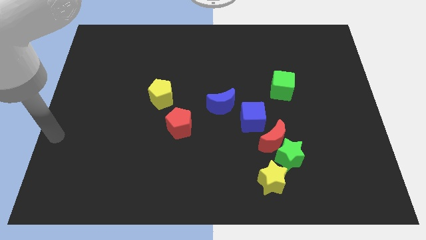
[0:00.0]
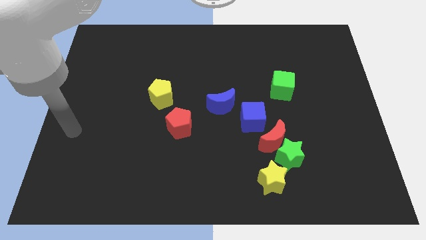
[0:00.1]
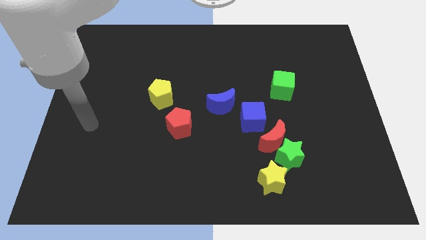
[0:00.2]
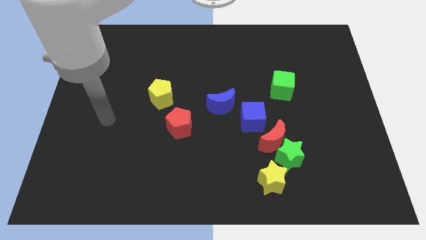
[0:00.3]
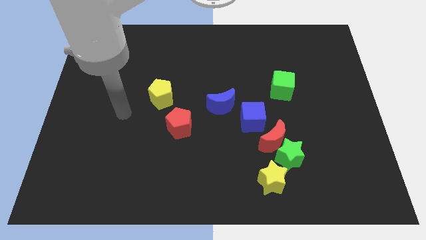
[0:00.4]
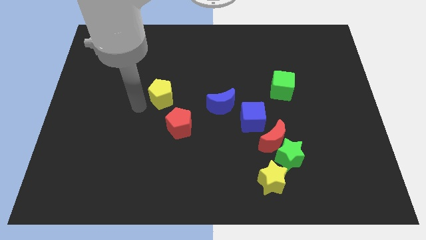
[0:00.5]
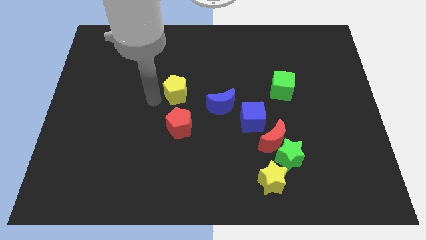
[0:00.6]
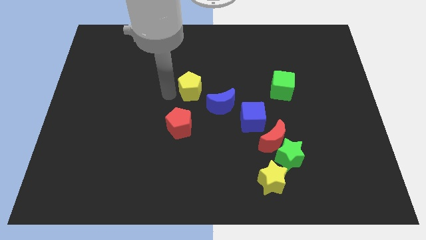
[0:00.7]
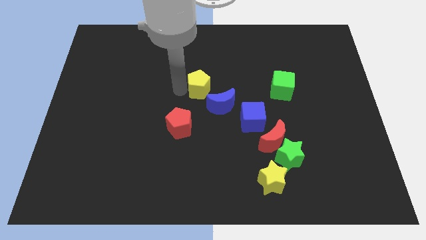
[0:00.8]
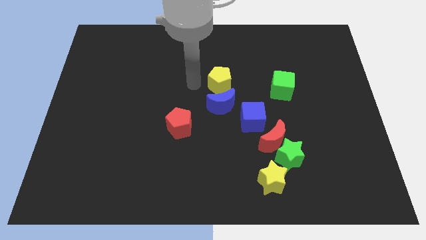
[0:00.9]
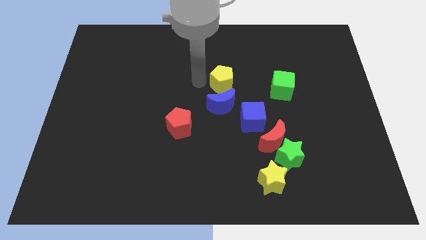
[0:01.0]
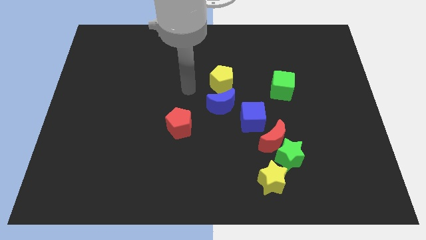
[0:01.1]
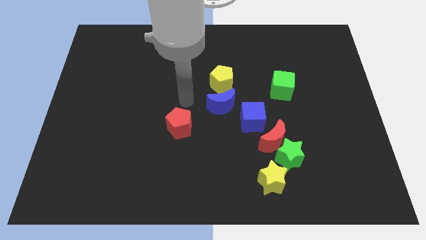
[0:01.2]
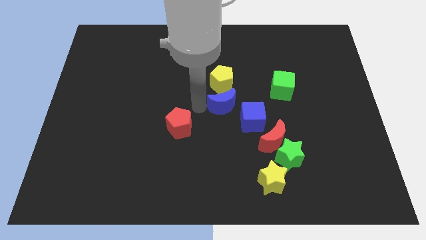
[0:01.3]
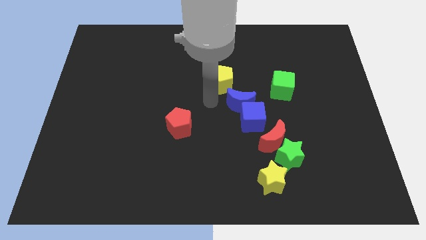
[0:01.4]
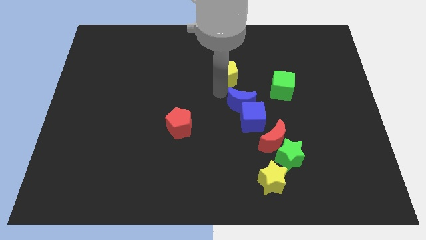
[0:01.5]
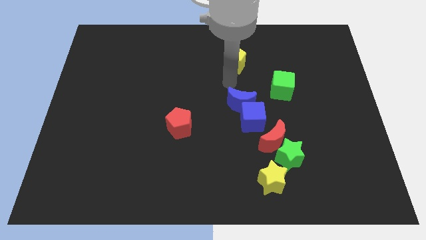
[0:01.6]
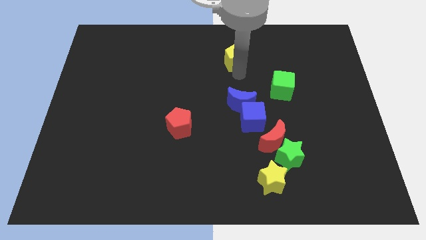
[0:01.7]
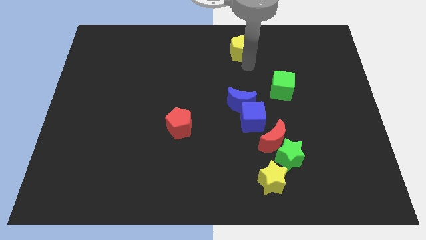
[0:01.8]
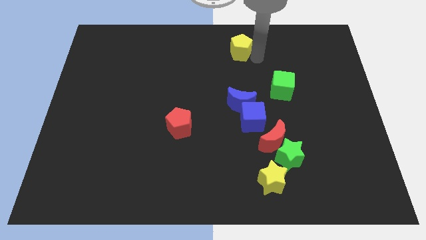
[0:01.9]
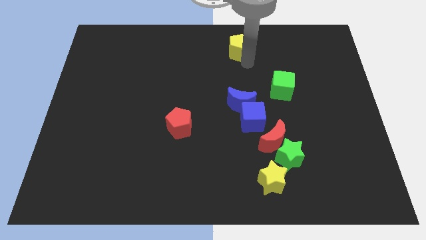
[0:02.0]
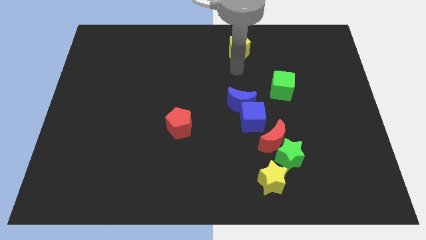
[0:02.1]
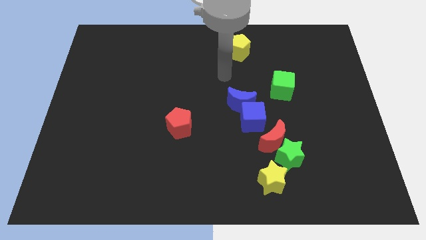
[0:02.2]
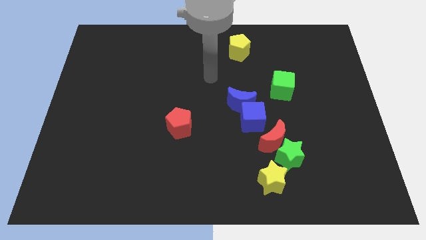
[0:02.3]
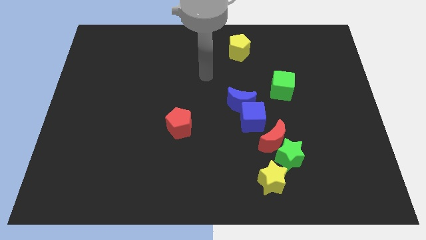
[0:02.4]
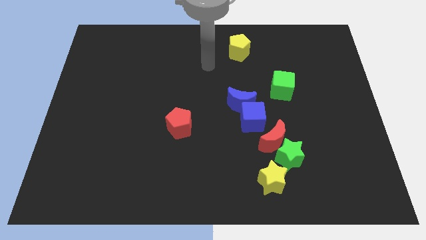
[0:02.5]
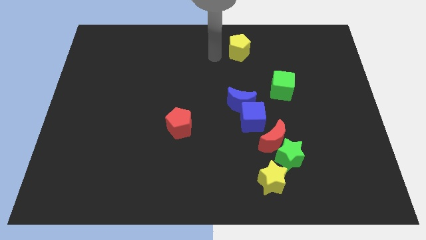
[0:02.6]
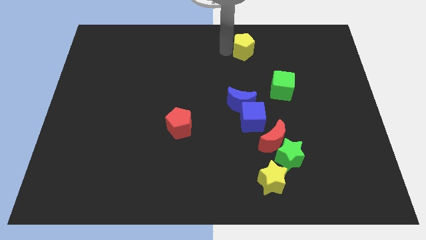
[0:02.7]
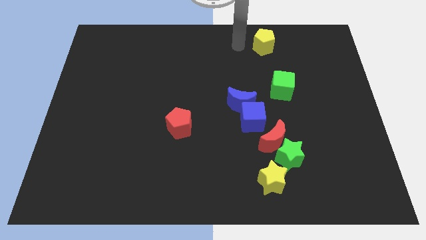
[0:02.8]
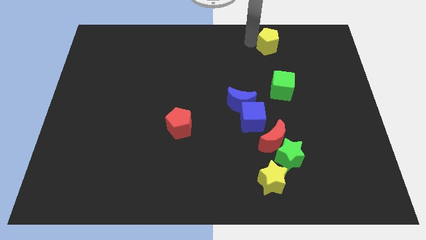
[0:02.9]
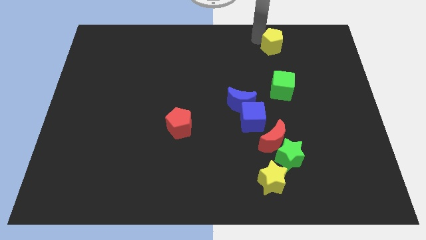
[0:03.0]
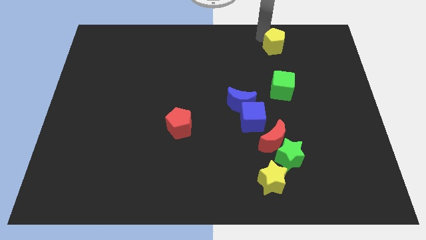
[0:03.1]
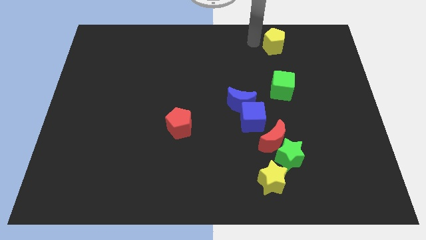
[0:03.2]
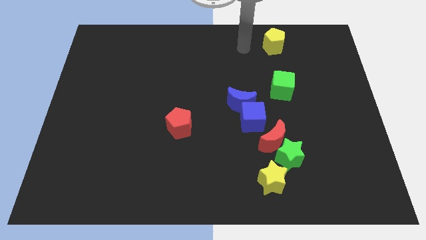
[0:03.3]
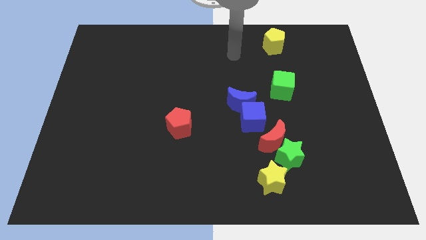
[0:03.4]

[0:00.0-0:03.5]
move the yellow pentagon to the top of the green cube

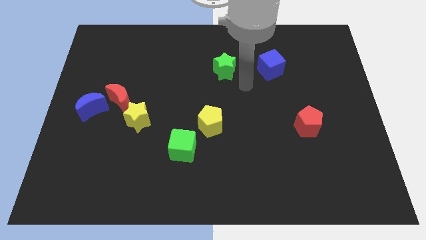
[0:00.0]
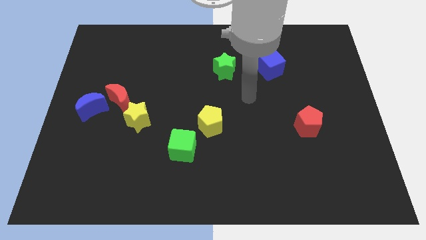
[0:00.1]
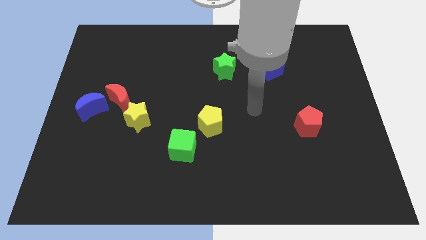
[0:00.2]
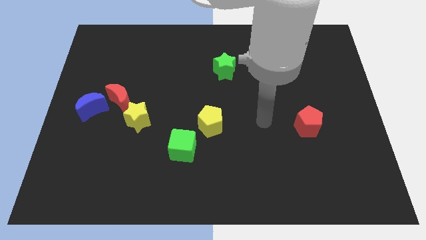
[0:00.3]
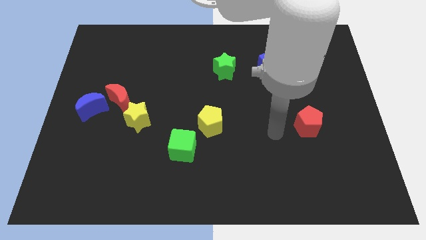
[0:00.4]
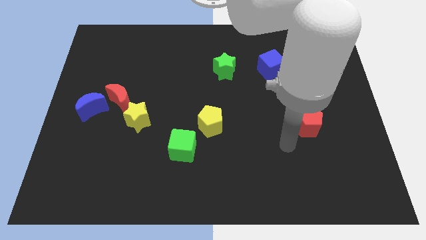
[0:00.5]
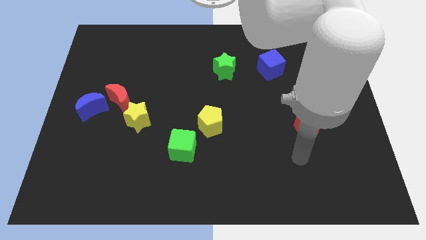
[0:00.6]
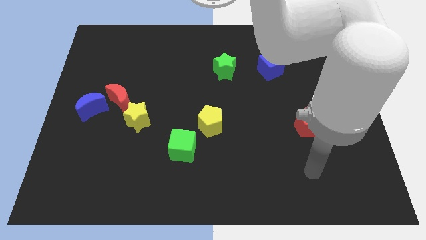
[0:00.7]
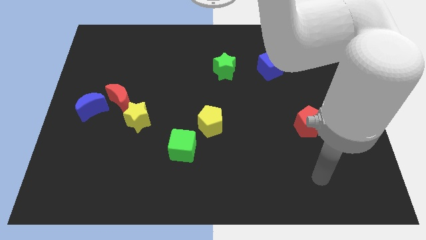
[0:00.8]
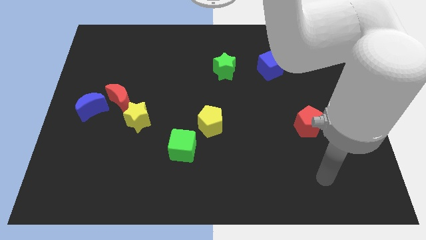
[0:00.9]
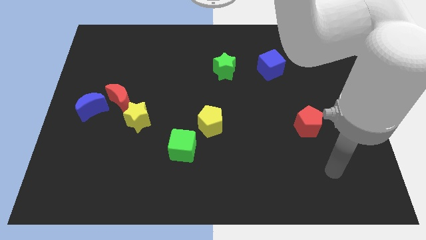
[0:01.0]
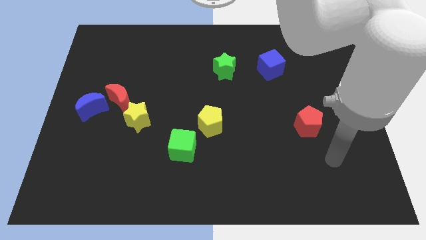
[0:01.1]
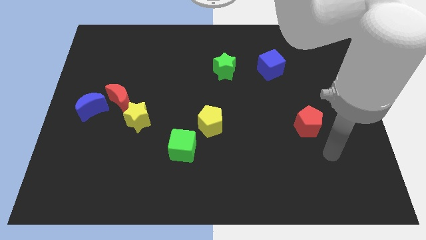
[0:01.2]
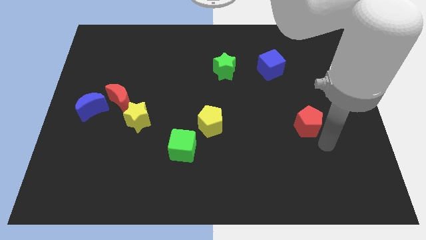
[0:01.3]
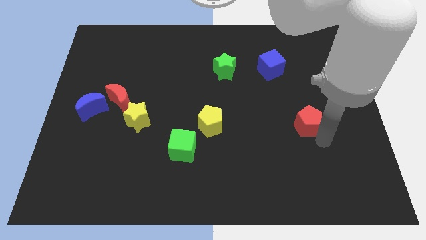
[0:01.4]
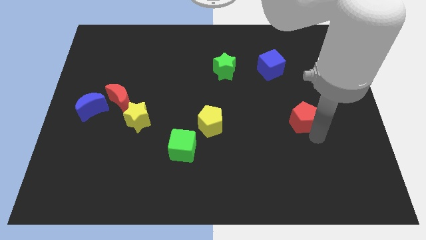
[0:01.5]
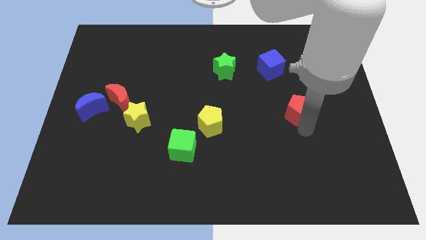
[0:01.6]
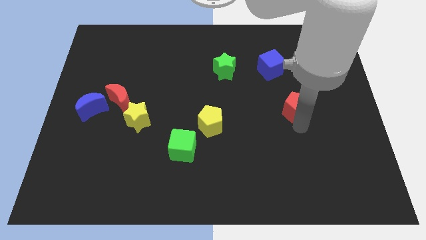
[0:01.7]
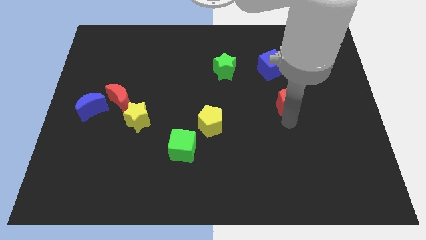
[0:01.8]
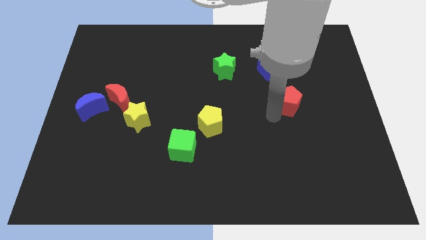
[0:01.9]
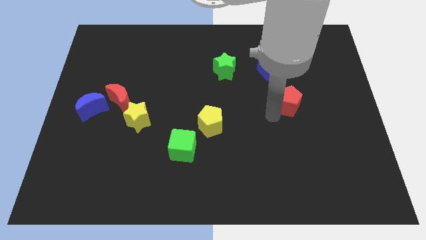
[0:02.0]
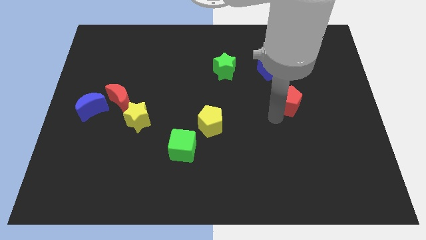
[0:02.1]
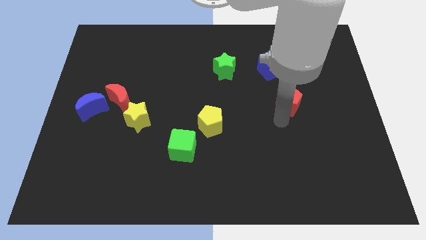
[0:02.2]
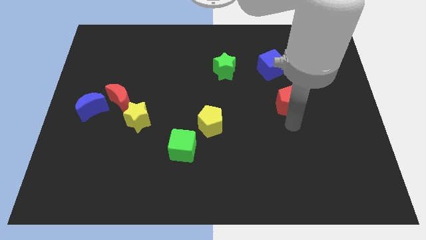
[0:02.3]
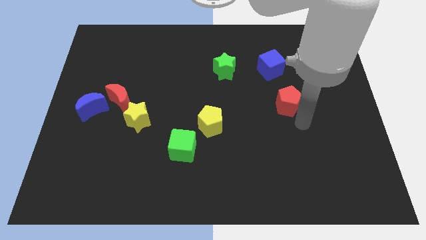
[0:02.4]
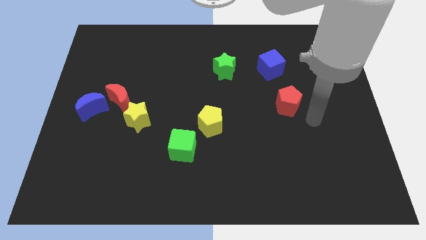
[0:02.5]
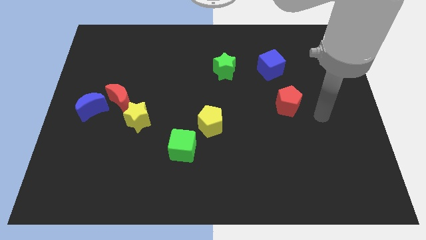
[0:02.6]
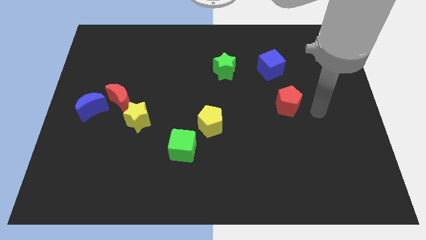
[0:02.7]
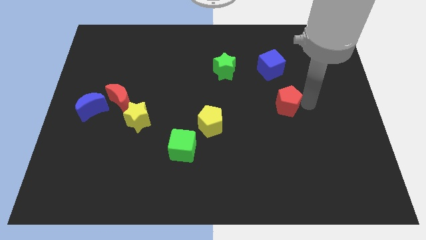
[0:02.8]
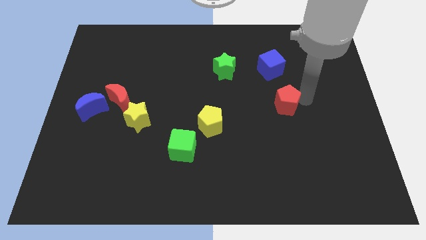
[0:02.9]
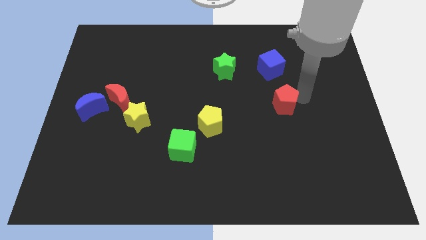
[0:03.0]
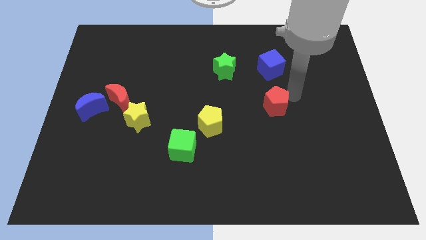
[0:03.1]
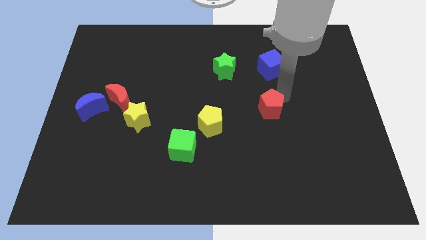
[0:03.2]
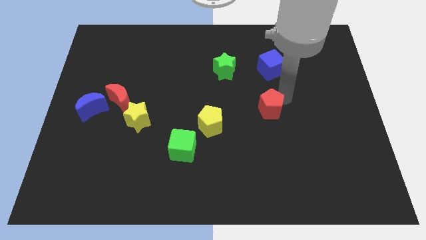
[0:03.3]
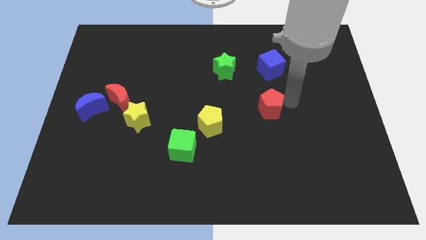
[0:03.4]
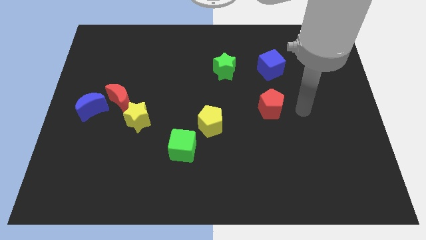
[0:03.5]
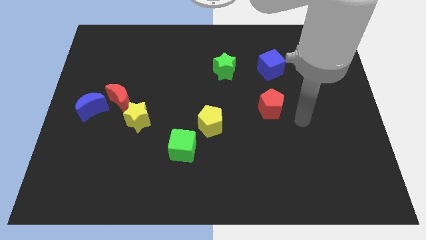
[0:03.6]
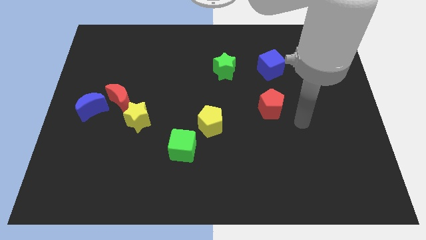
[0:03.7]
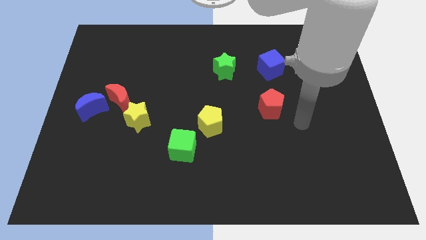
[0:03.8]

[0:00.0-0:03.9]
push the red pentagon to the right of the yellow pentagon

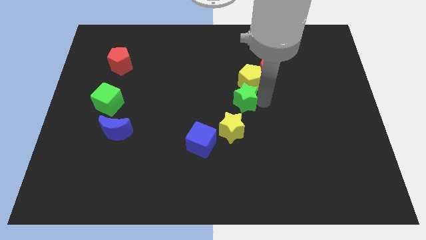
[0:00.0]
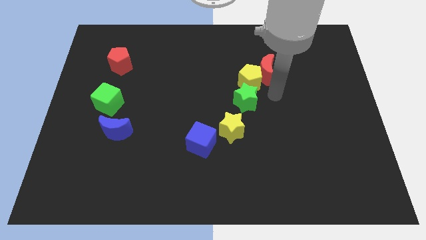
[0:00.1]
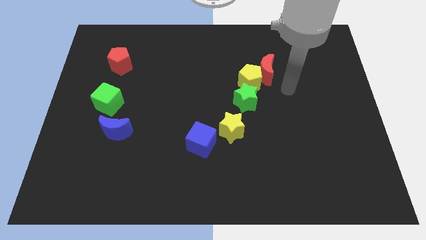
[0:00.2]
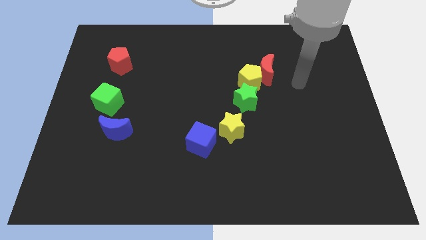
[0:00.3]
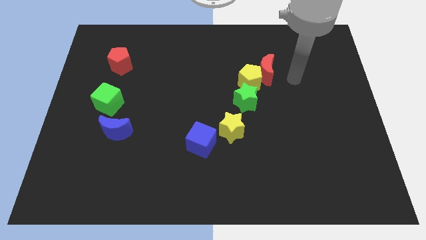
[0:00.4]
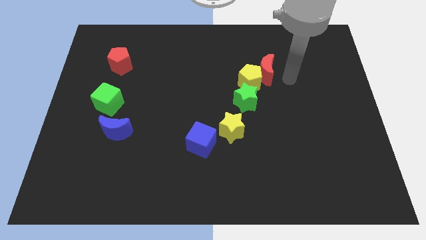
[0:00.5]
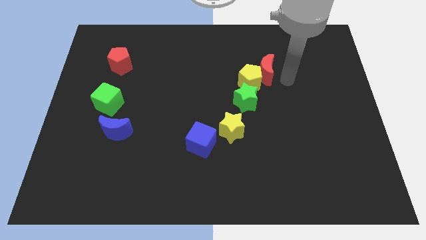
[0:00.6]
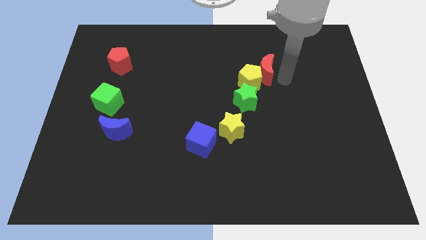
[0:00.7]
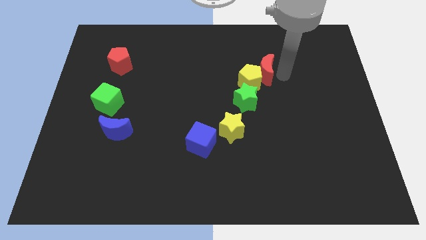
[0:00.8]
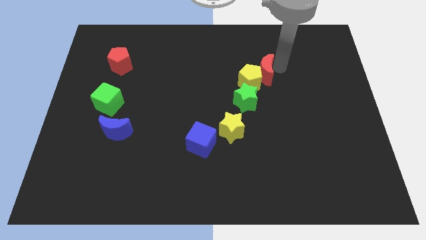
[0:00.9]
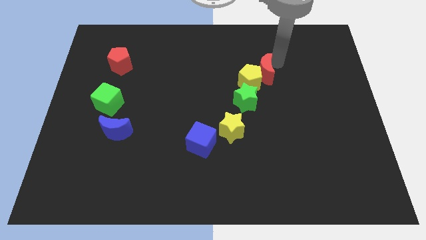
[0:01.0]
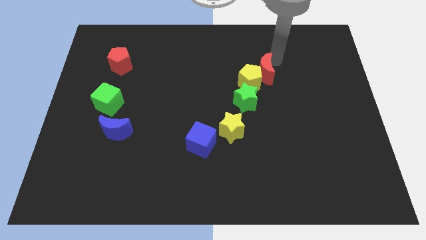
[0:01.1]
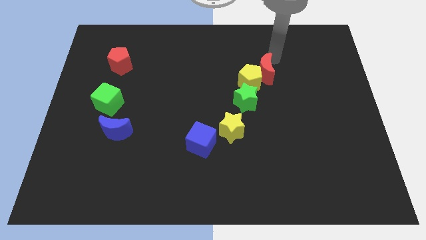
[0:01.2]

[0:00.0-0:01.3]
push the red crescent to the right of the yellow pentagon

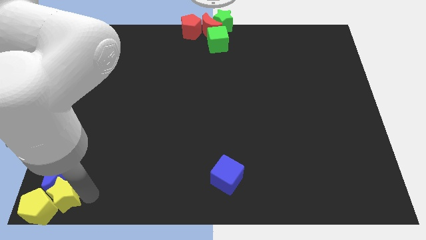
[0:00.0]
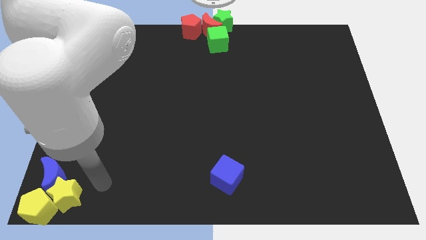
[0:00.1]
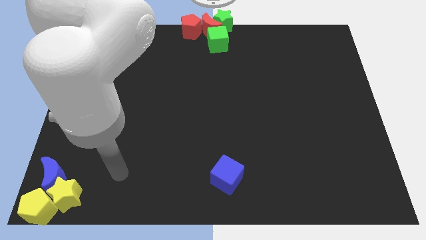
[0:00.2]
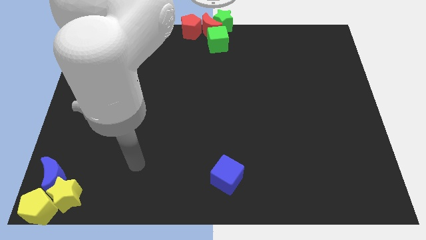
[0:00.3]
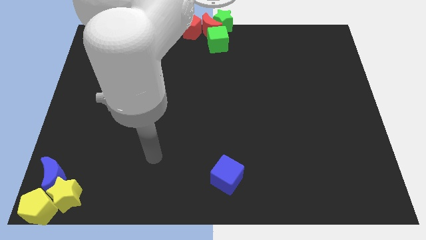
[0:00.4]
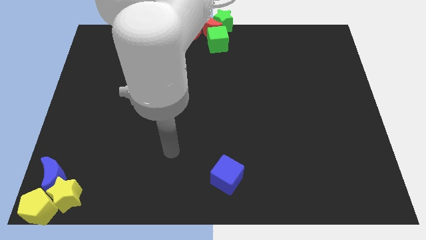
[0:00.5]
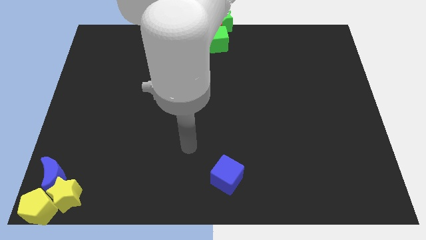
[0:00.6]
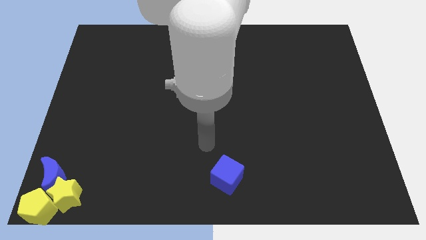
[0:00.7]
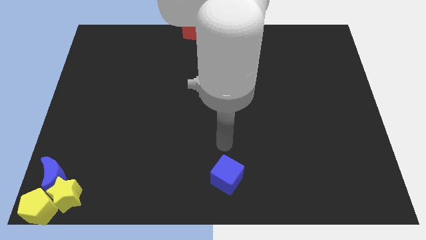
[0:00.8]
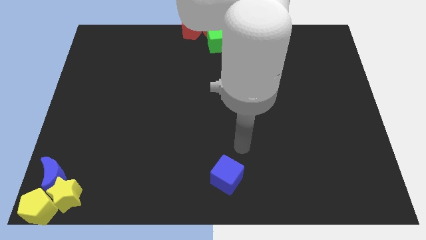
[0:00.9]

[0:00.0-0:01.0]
move the arm away from the yellow star
